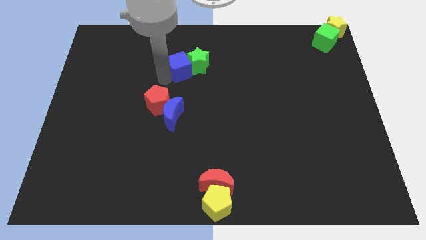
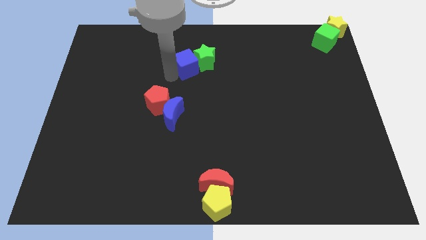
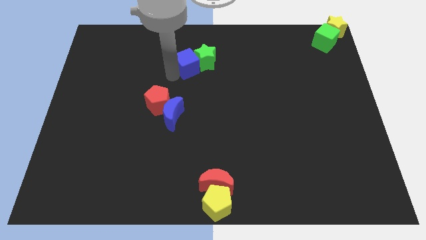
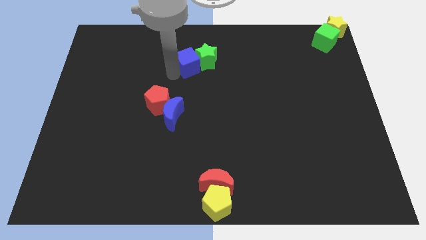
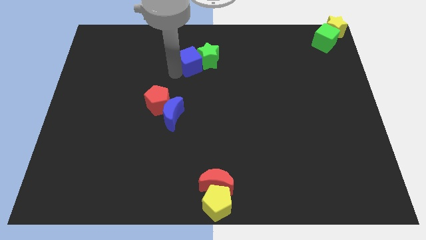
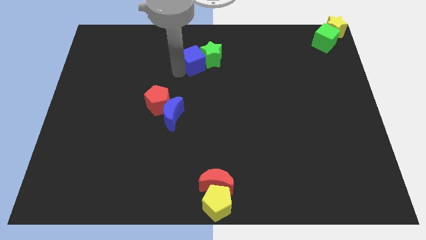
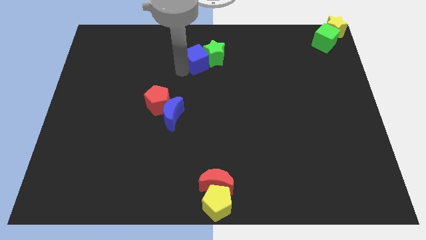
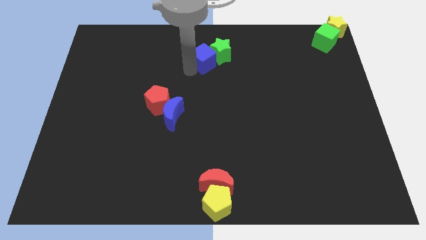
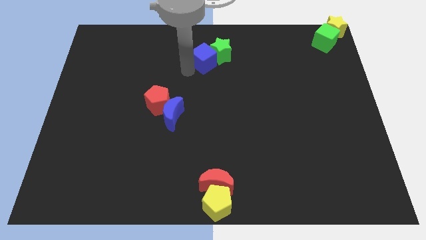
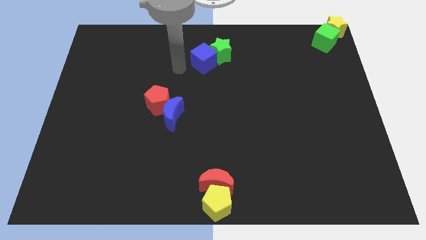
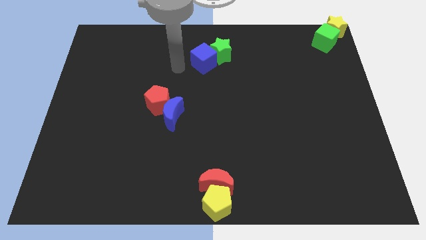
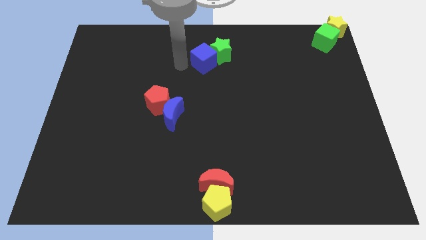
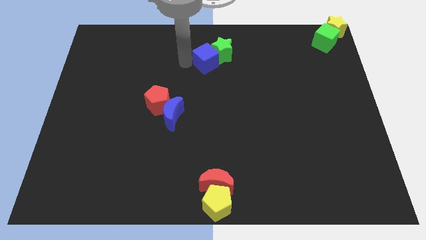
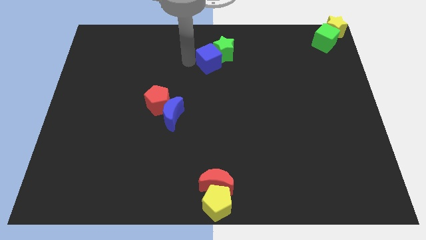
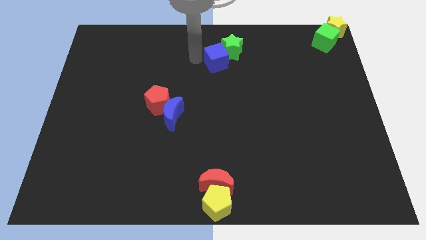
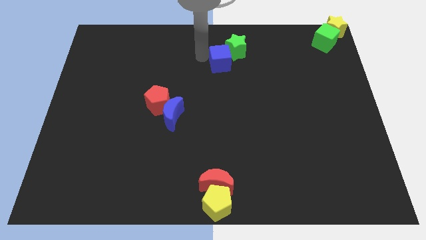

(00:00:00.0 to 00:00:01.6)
move the blue cube along with the green star to the top center

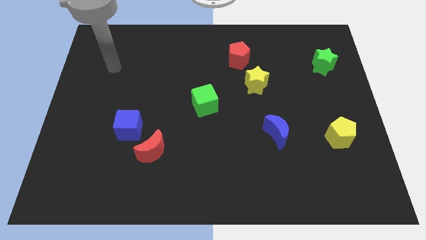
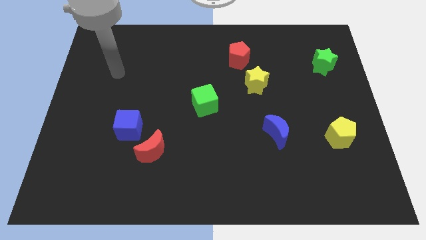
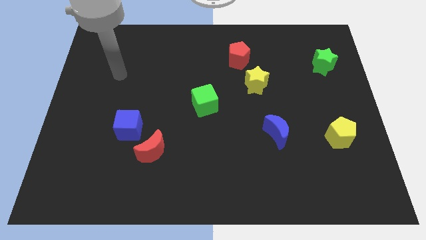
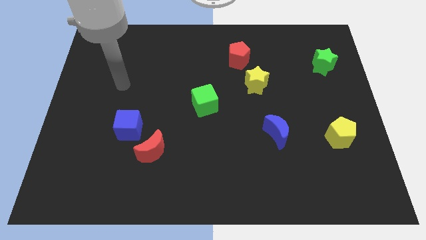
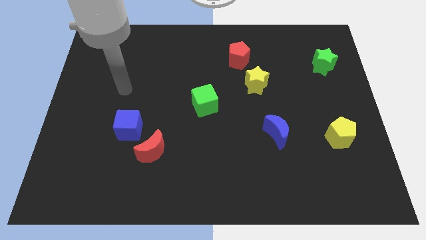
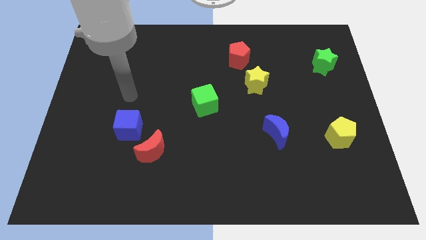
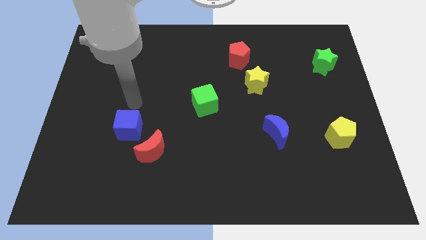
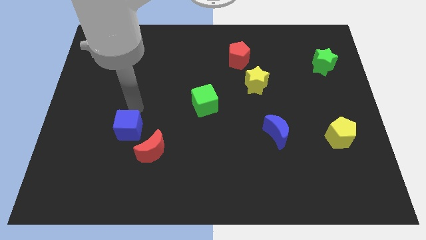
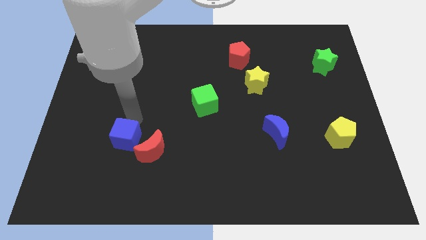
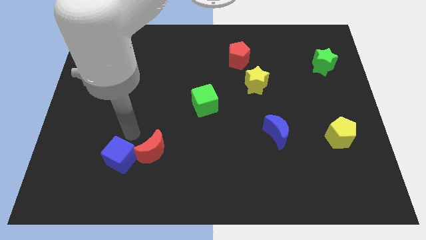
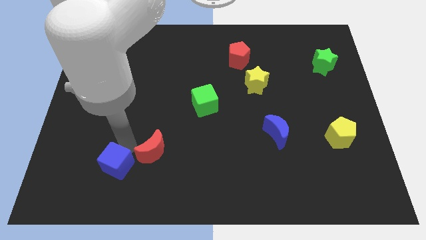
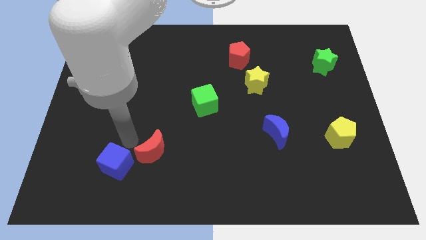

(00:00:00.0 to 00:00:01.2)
slide blue cube into red moon

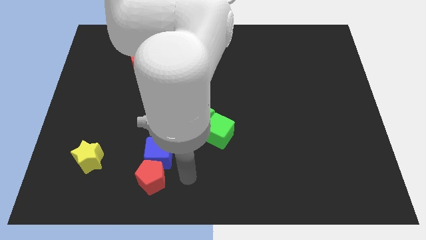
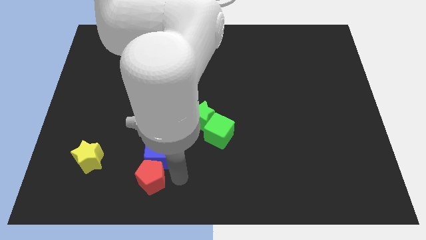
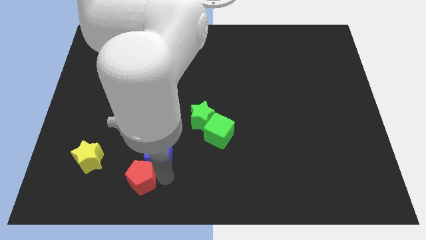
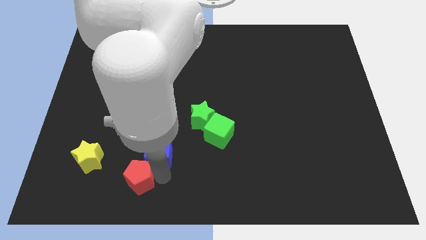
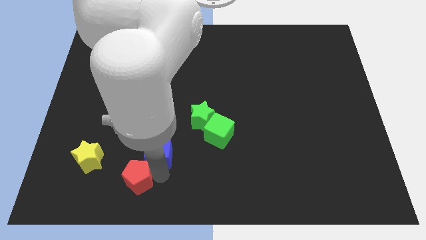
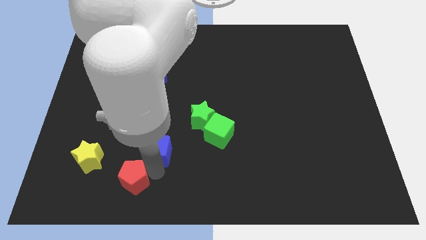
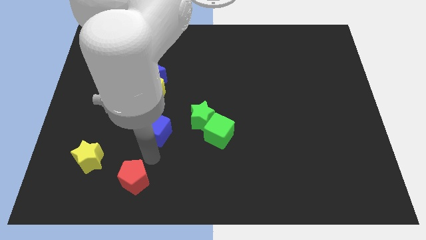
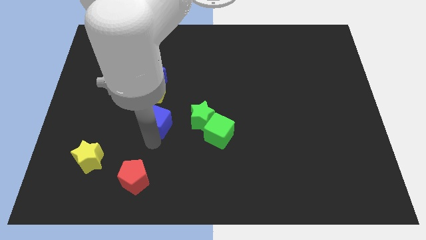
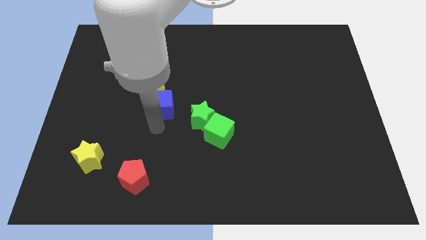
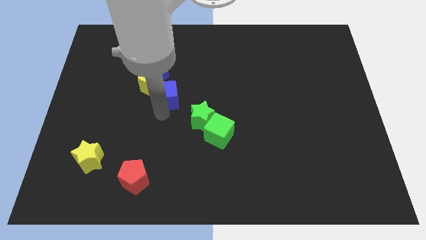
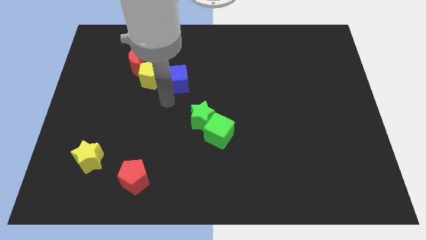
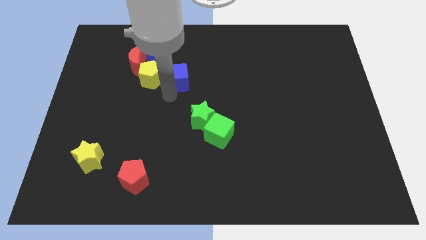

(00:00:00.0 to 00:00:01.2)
move the blue cube away from the red pentagon

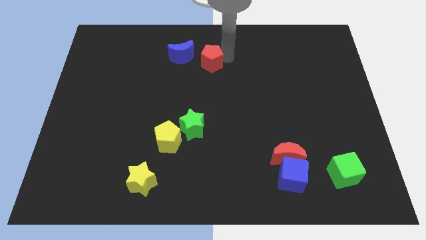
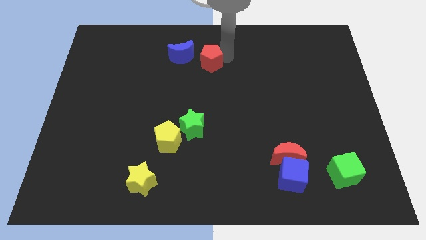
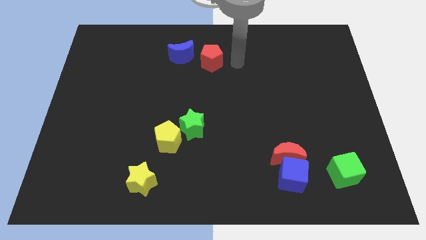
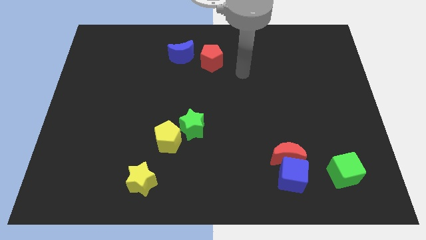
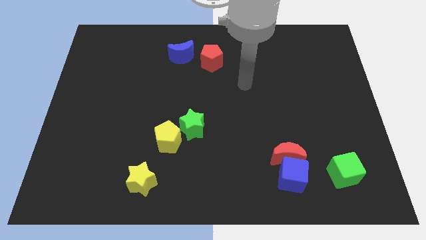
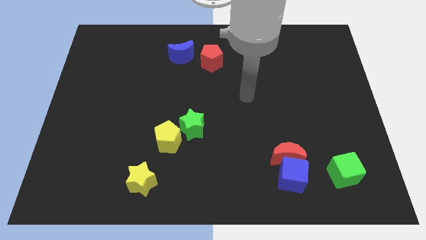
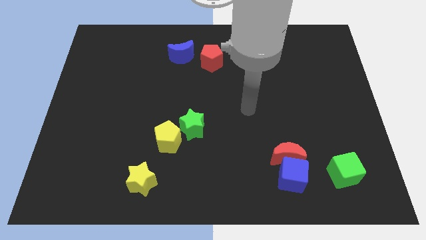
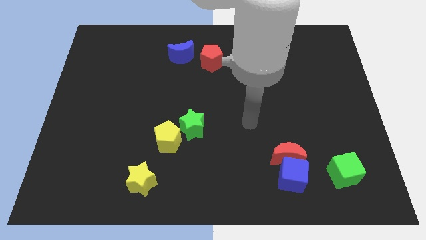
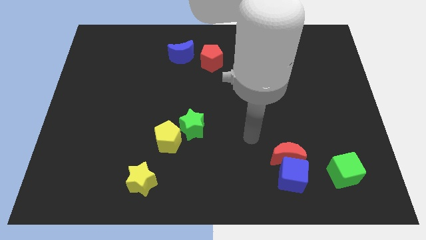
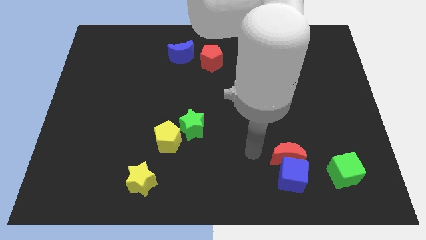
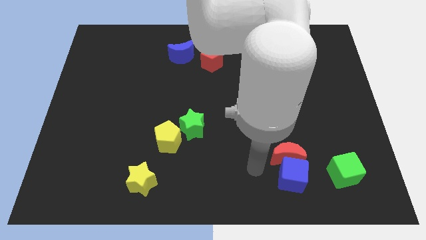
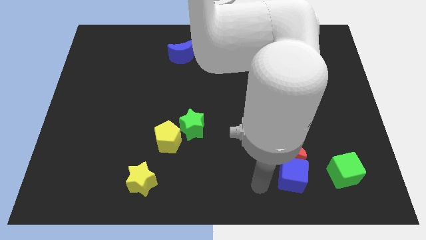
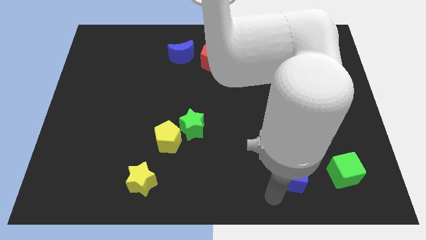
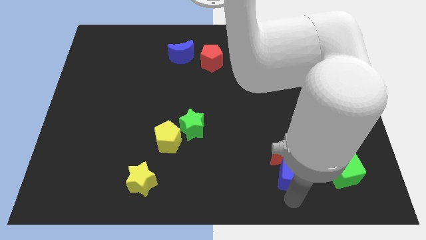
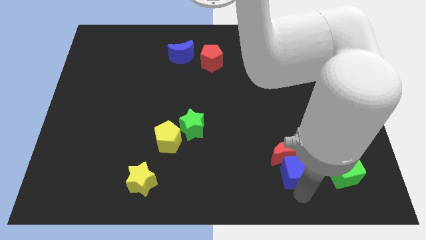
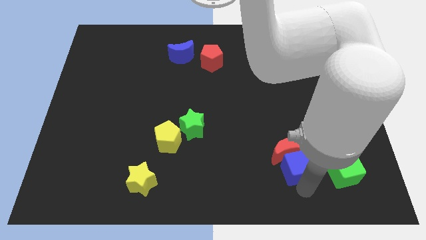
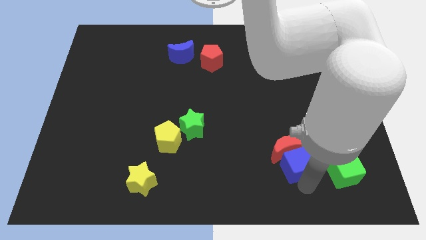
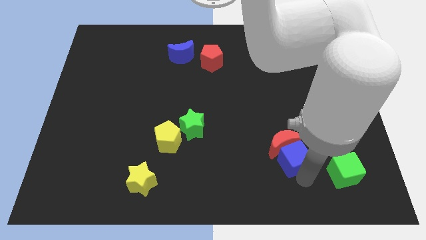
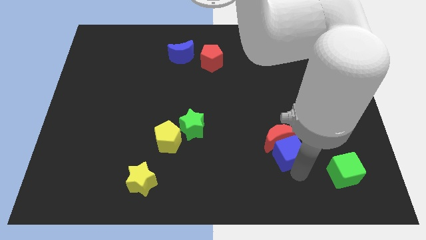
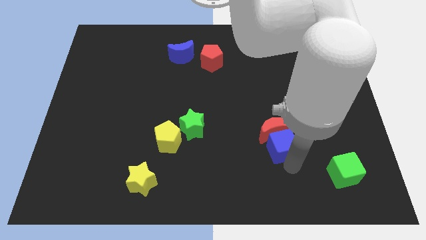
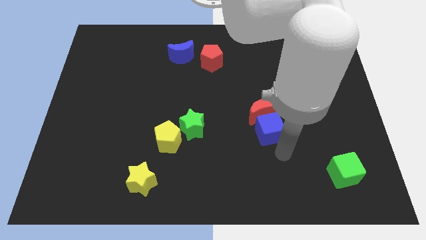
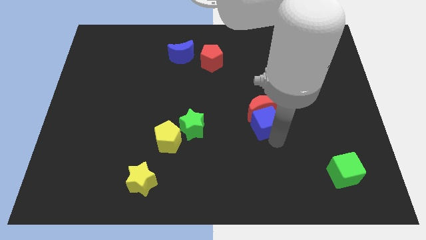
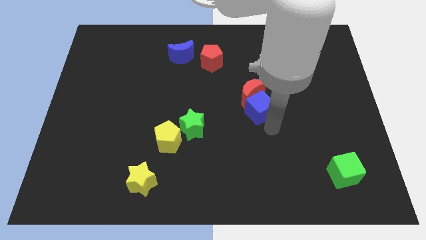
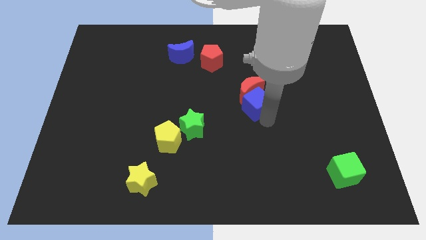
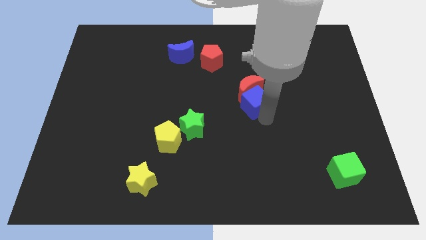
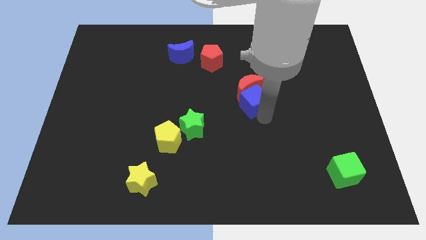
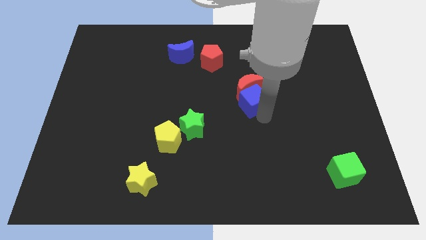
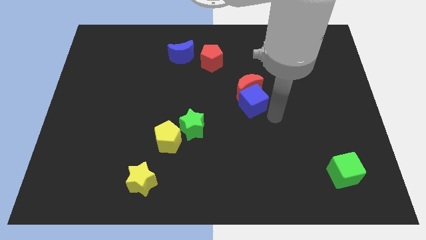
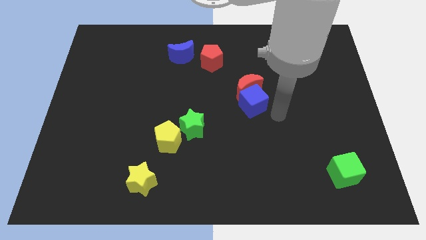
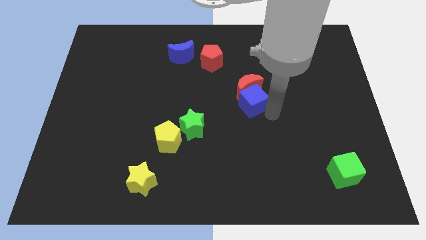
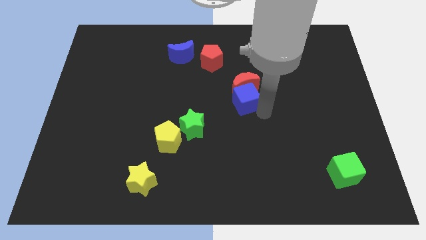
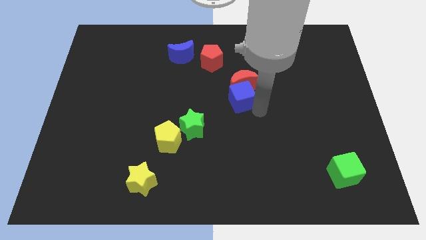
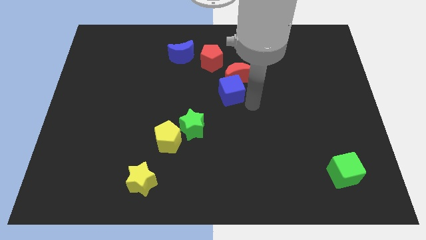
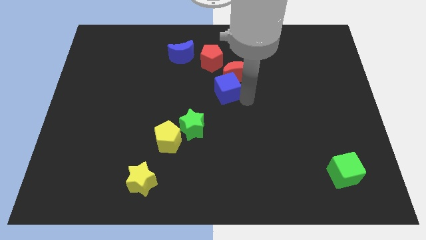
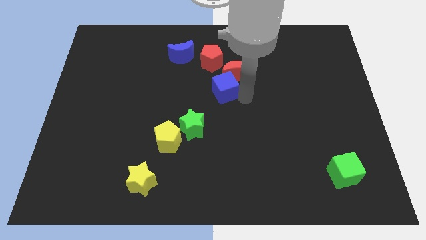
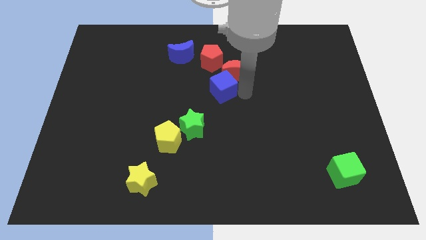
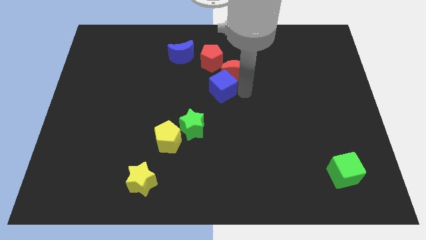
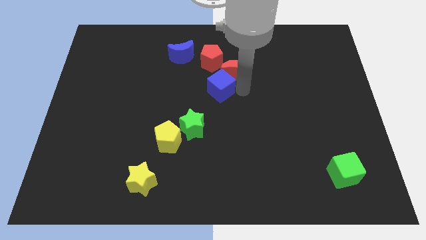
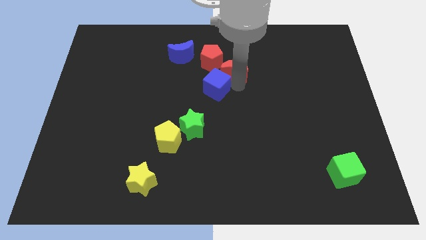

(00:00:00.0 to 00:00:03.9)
push the red moon with a blue cube down to the red pentagon

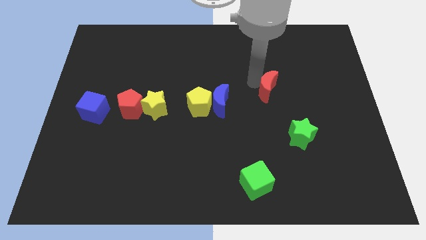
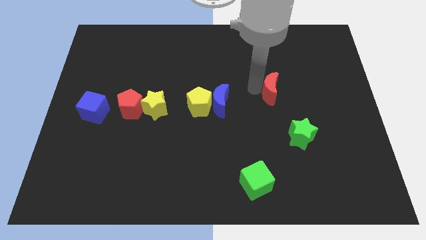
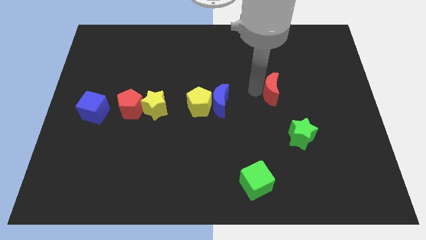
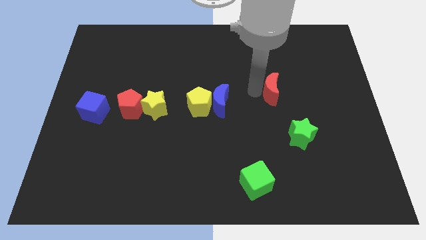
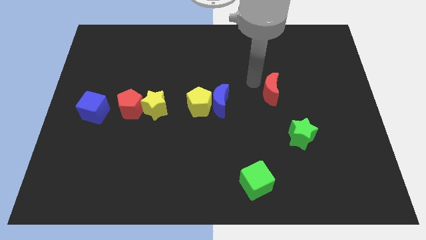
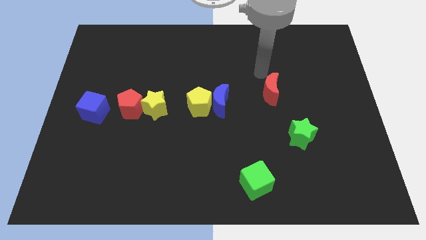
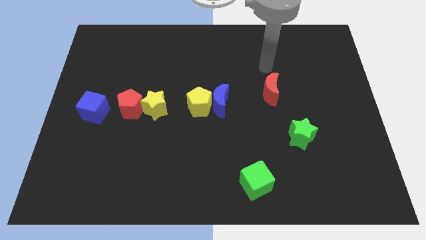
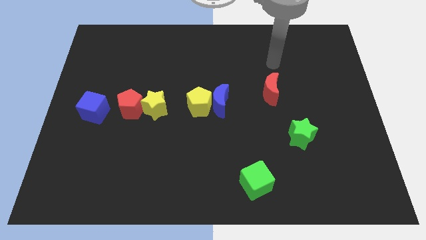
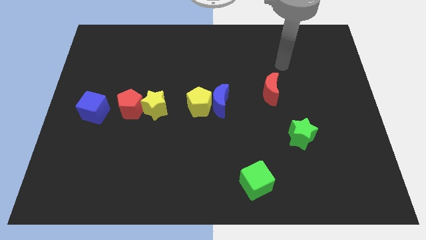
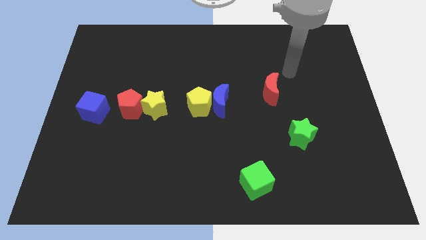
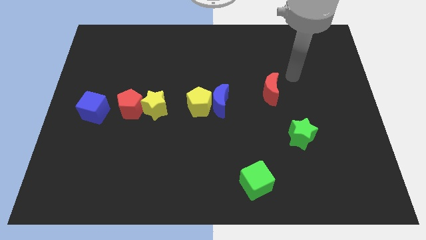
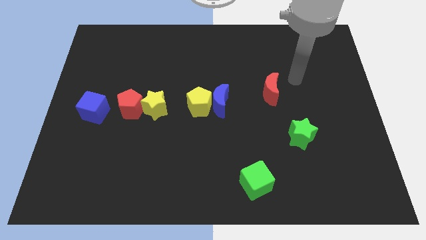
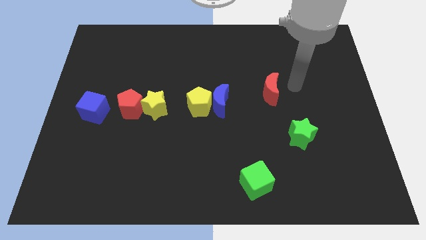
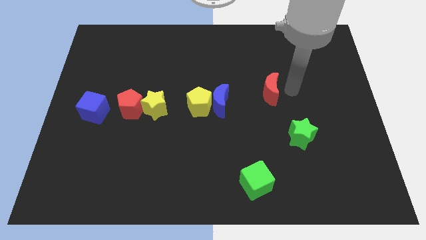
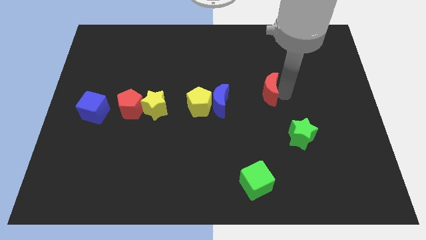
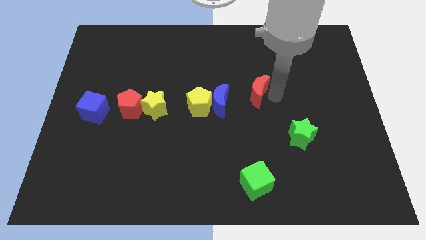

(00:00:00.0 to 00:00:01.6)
move the red crescent towards the blue moon
